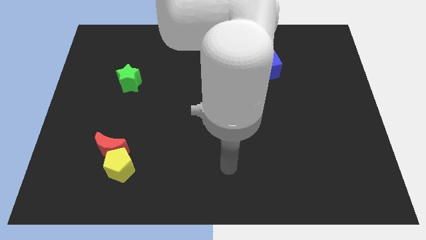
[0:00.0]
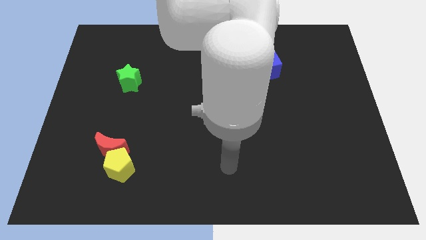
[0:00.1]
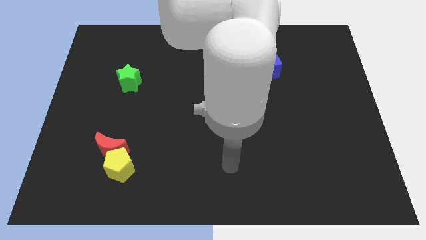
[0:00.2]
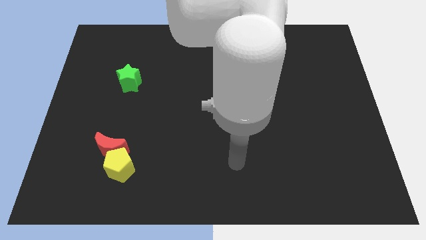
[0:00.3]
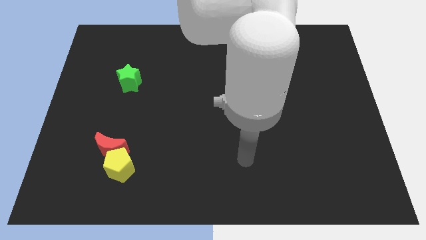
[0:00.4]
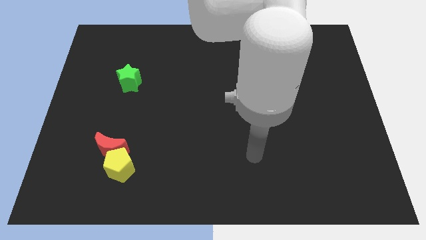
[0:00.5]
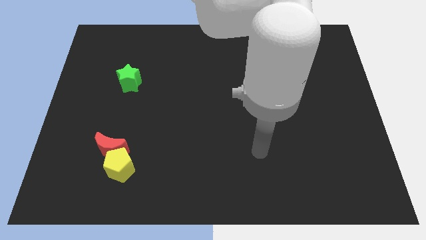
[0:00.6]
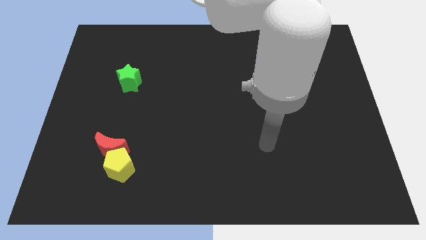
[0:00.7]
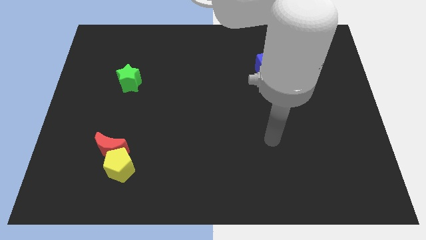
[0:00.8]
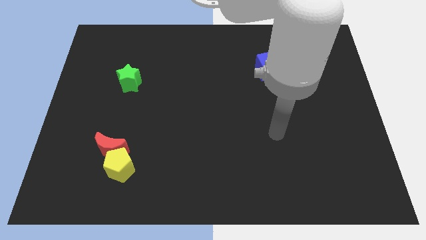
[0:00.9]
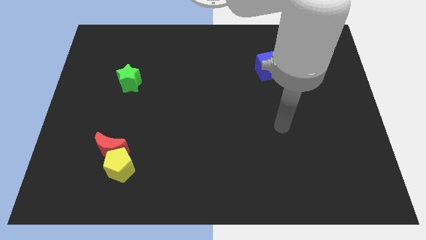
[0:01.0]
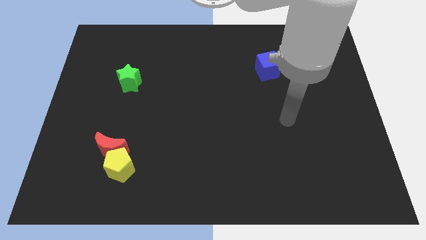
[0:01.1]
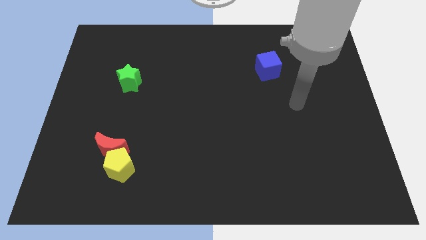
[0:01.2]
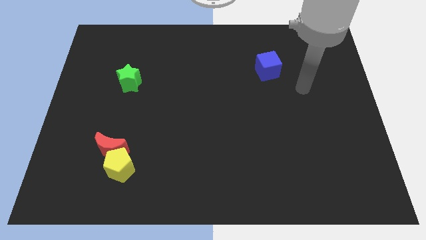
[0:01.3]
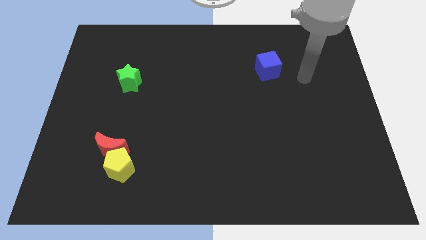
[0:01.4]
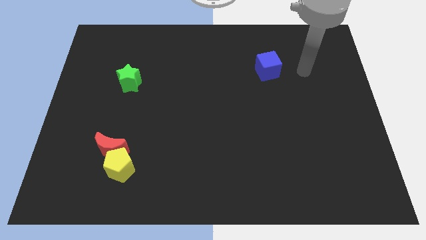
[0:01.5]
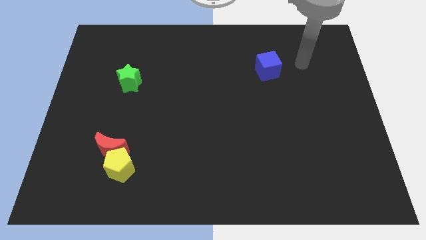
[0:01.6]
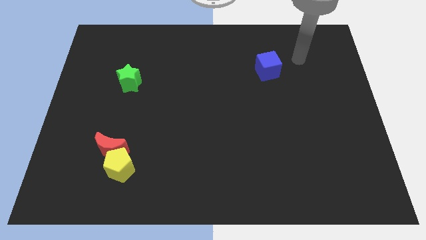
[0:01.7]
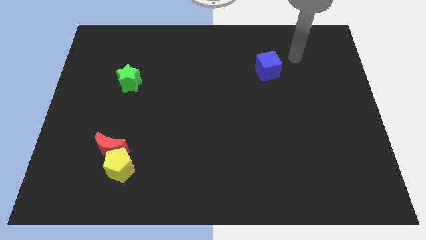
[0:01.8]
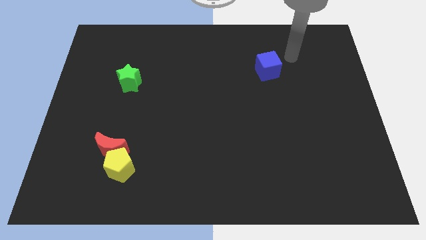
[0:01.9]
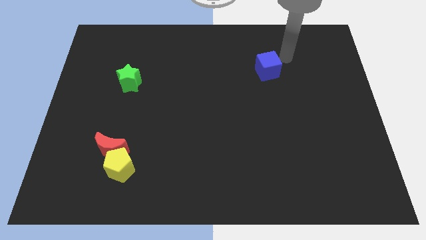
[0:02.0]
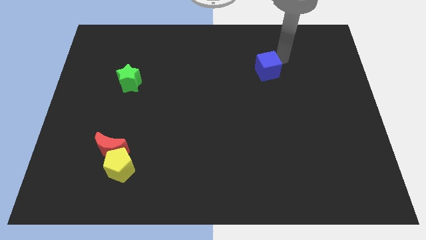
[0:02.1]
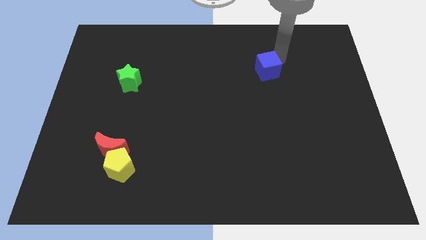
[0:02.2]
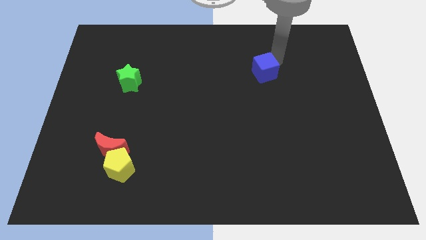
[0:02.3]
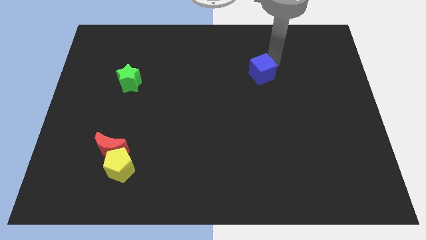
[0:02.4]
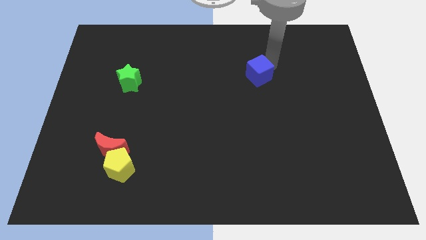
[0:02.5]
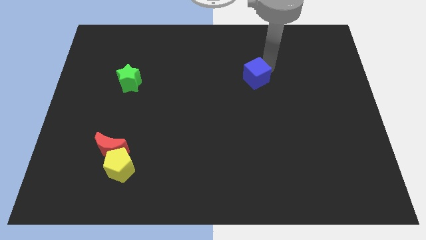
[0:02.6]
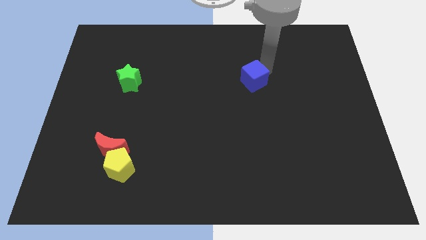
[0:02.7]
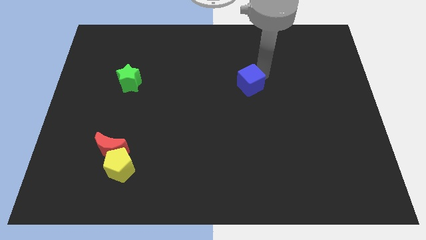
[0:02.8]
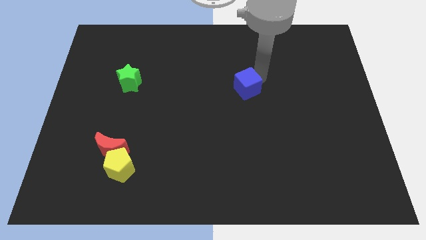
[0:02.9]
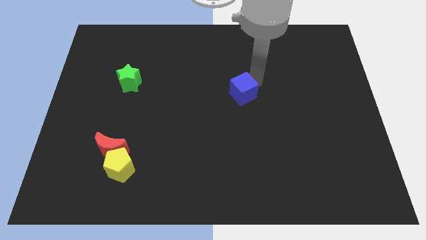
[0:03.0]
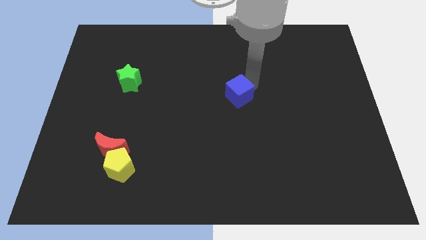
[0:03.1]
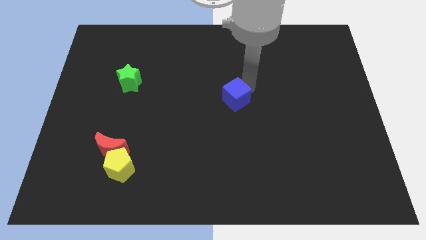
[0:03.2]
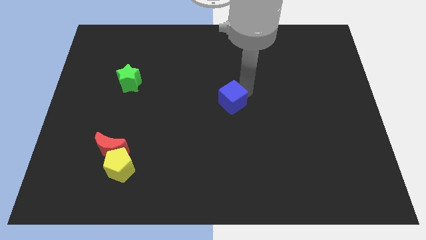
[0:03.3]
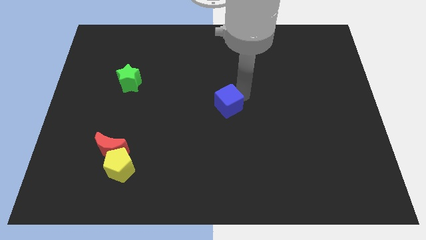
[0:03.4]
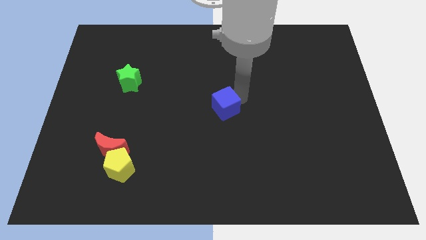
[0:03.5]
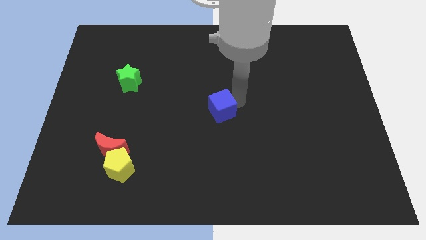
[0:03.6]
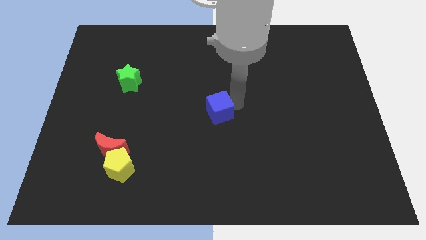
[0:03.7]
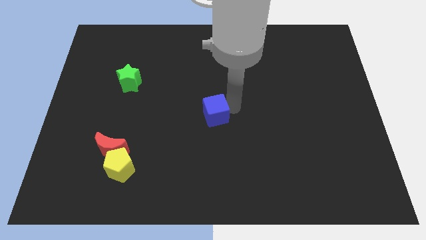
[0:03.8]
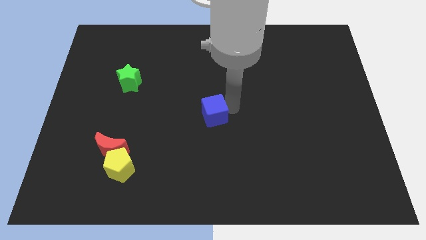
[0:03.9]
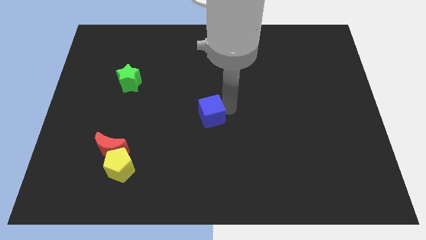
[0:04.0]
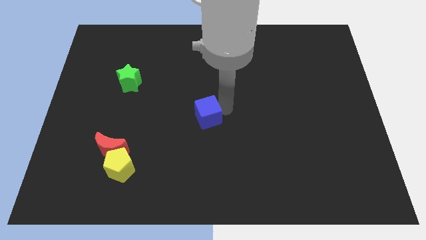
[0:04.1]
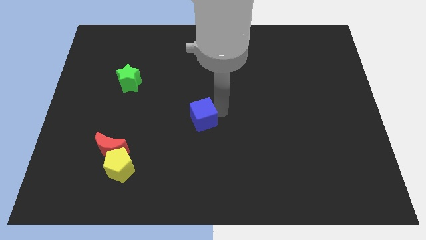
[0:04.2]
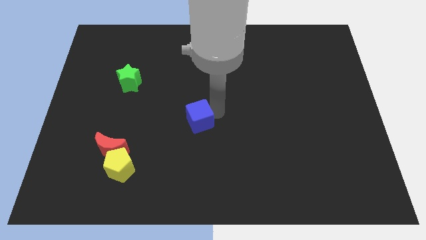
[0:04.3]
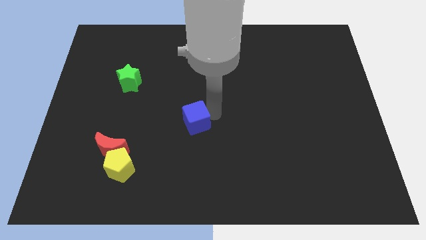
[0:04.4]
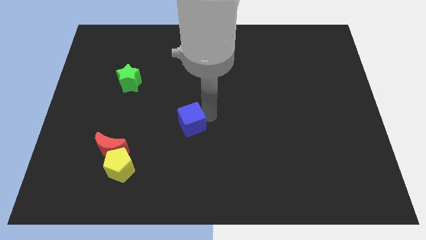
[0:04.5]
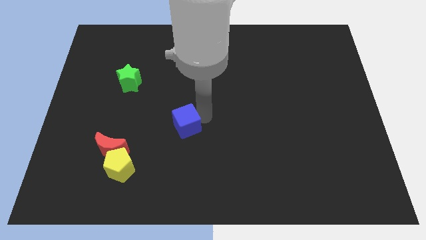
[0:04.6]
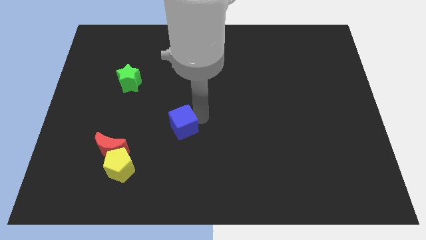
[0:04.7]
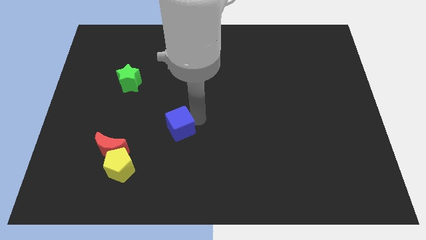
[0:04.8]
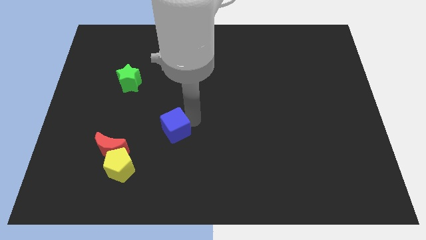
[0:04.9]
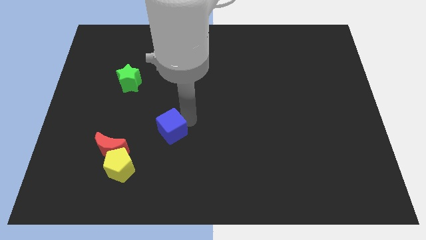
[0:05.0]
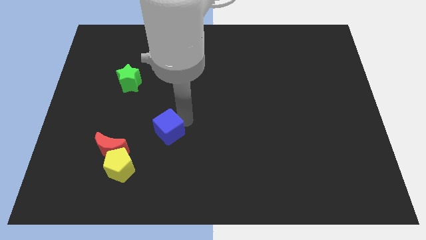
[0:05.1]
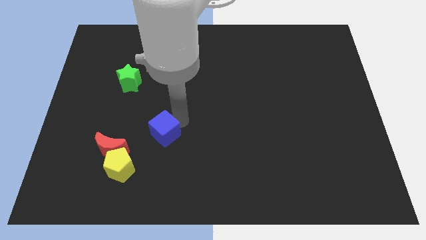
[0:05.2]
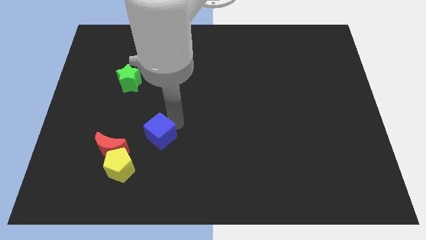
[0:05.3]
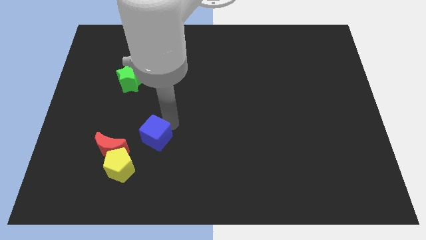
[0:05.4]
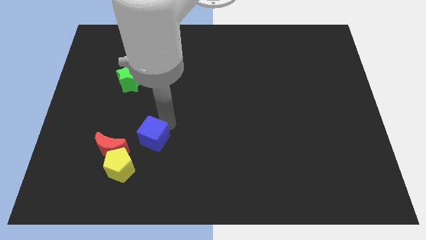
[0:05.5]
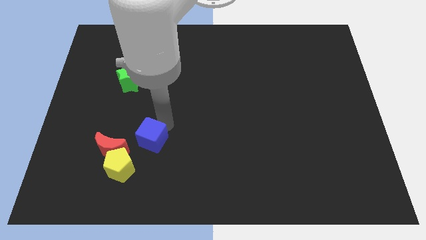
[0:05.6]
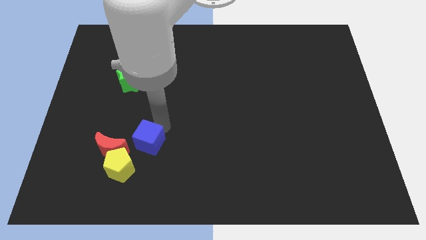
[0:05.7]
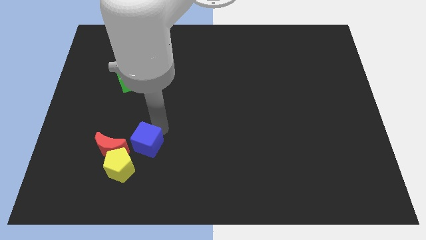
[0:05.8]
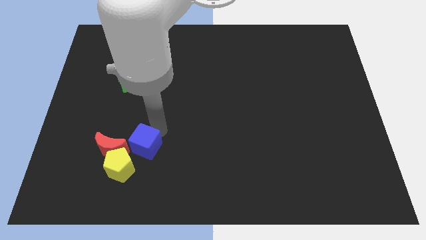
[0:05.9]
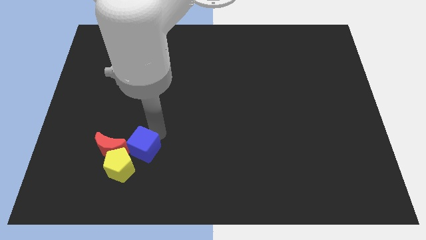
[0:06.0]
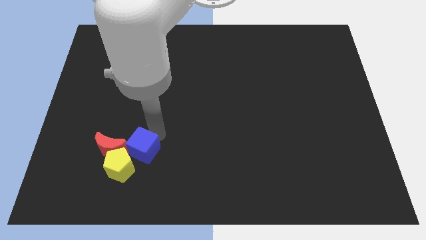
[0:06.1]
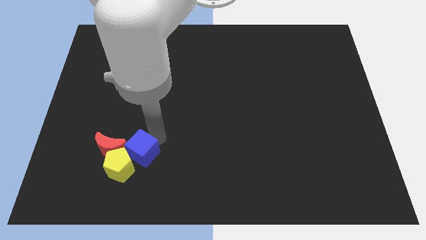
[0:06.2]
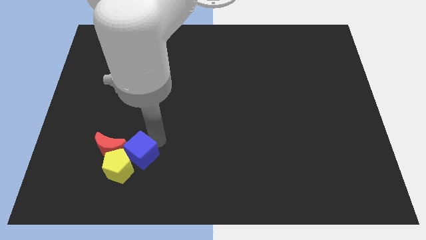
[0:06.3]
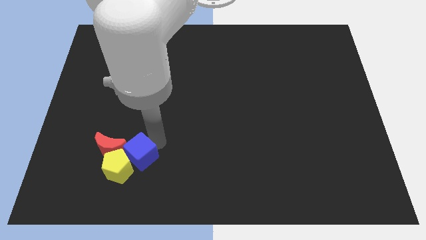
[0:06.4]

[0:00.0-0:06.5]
put the blue cube towards the yellow pentagon

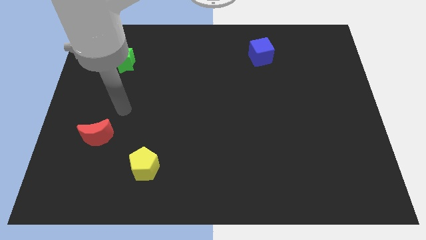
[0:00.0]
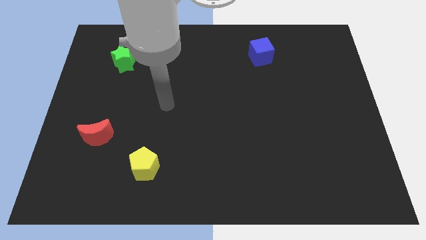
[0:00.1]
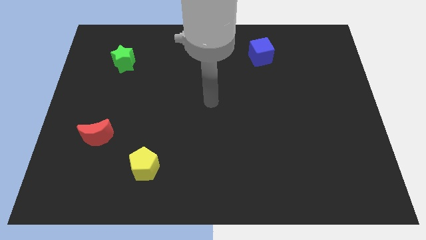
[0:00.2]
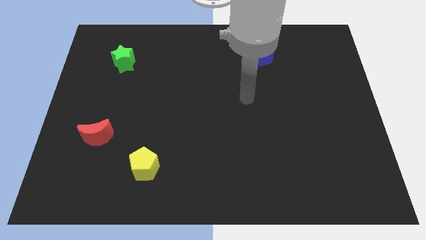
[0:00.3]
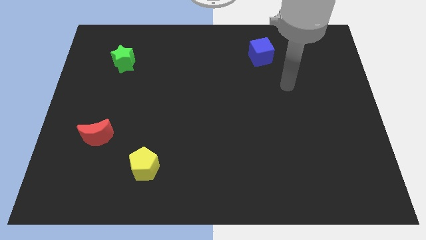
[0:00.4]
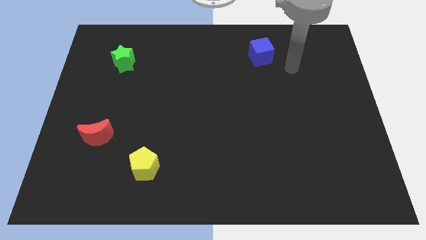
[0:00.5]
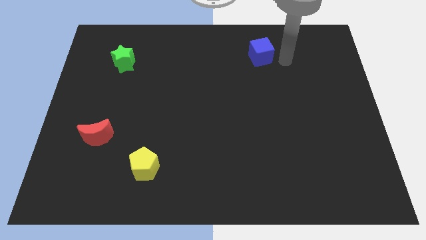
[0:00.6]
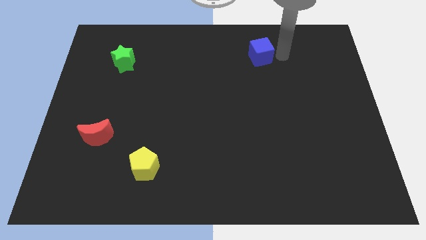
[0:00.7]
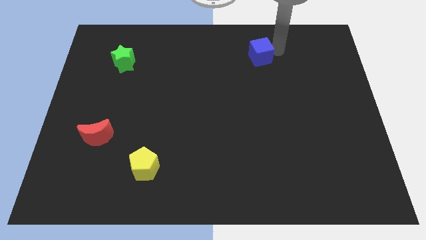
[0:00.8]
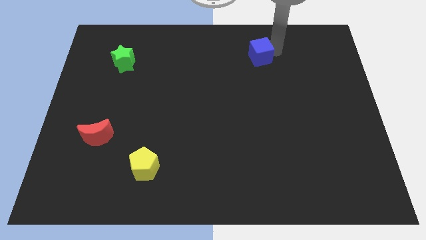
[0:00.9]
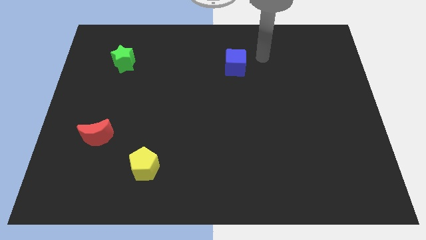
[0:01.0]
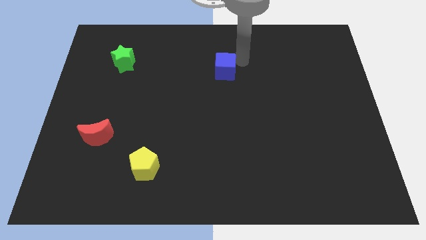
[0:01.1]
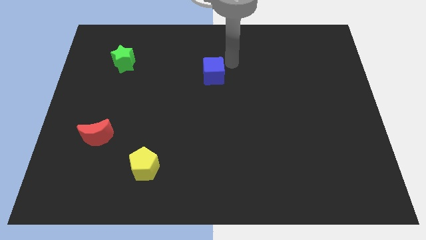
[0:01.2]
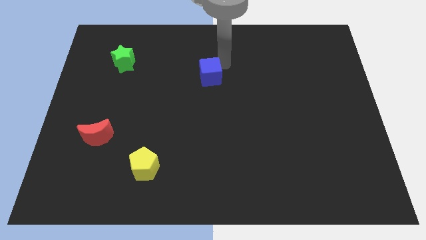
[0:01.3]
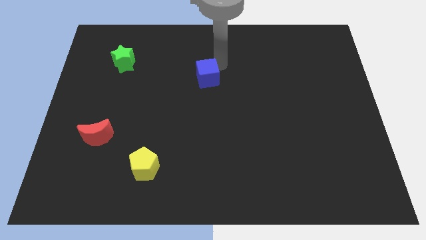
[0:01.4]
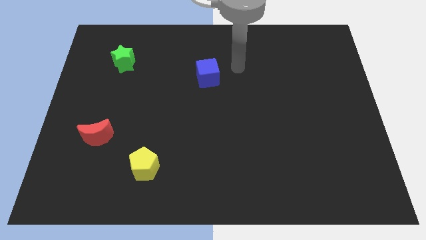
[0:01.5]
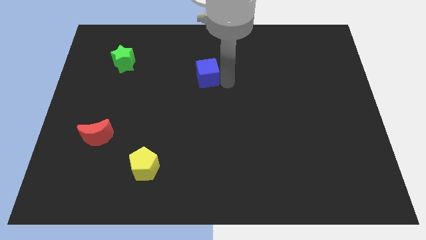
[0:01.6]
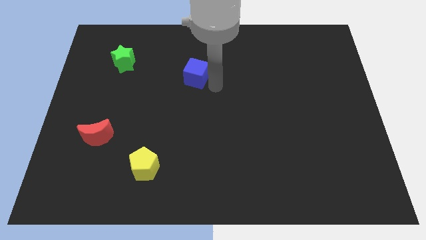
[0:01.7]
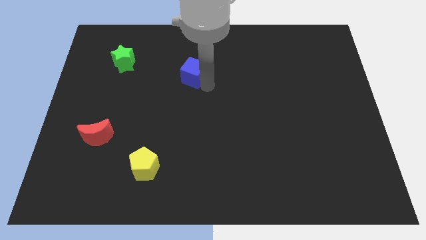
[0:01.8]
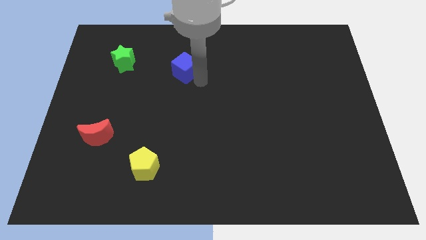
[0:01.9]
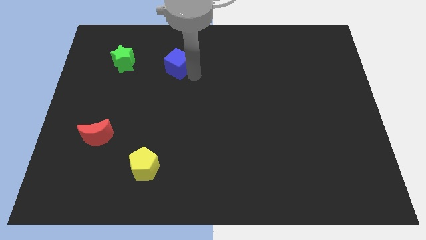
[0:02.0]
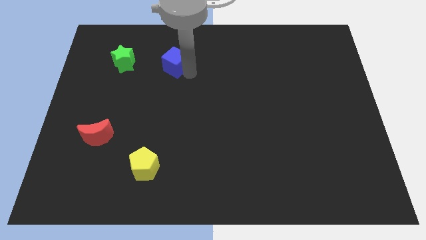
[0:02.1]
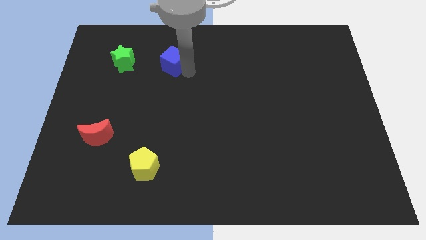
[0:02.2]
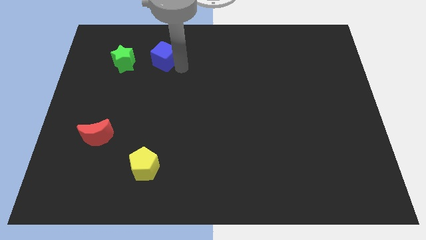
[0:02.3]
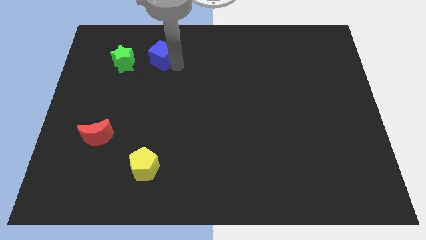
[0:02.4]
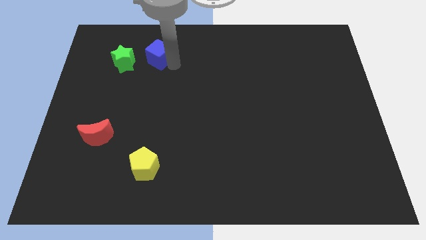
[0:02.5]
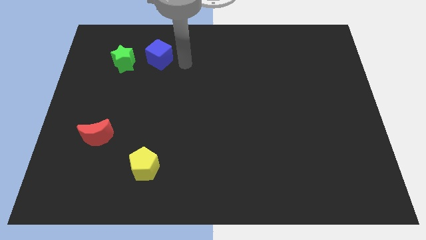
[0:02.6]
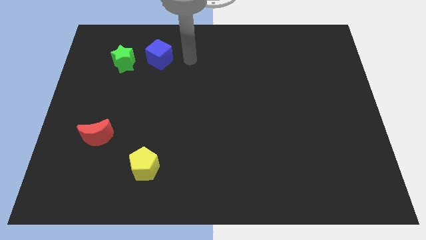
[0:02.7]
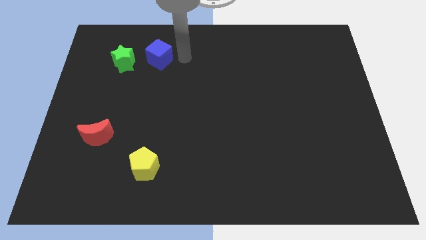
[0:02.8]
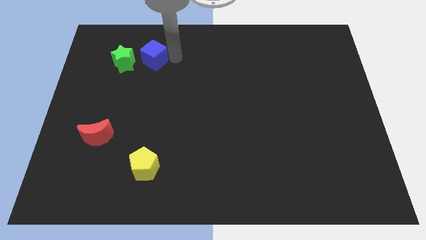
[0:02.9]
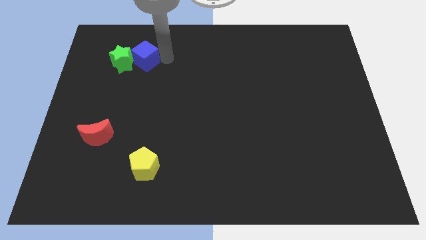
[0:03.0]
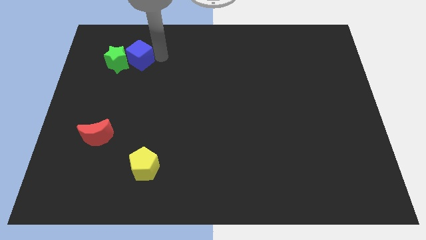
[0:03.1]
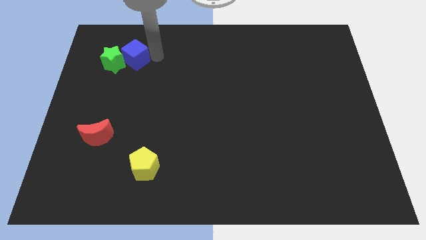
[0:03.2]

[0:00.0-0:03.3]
move the blue cube close to the green block
